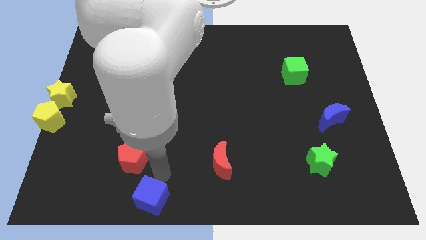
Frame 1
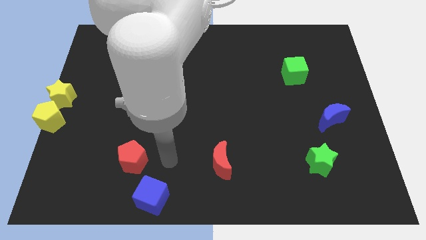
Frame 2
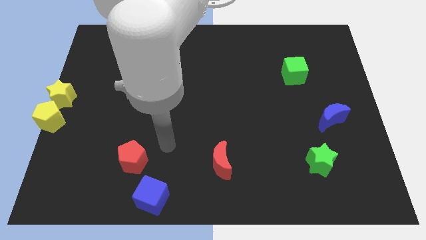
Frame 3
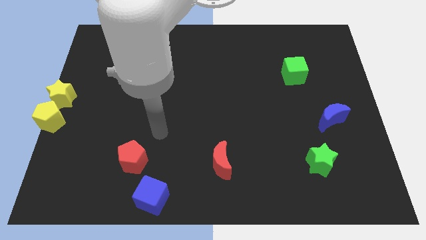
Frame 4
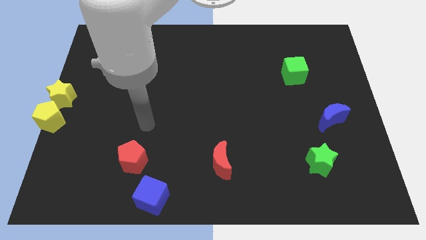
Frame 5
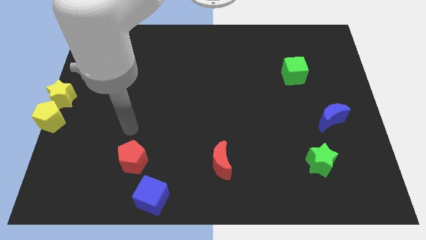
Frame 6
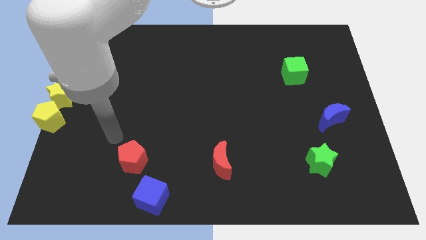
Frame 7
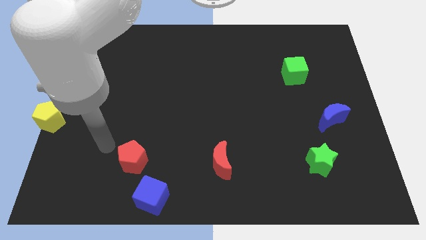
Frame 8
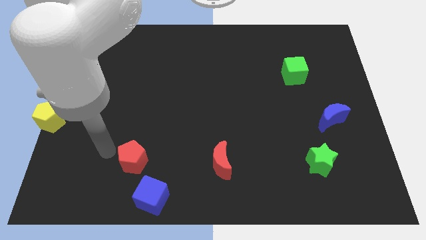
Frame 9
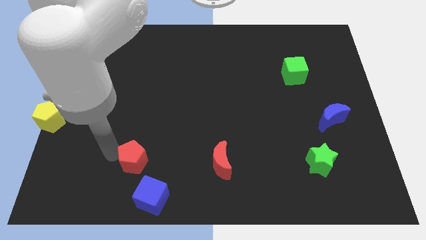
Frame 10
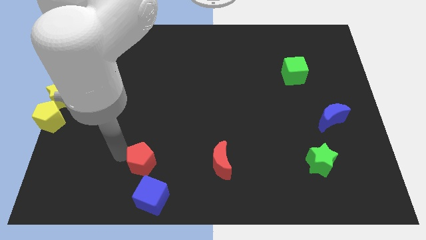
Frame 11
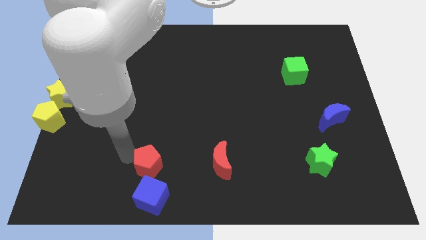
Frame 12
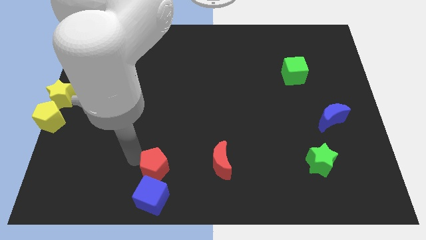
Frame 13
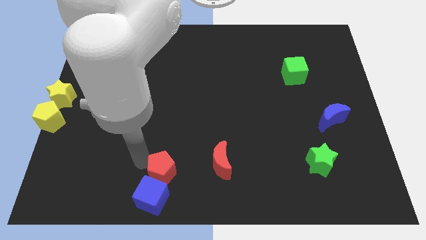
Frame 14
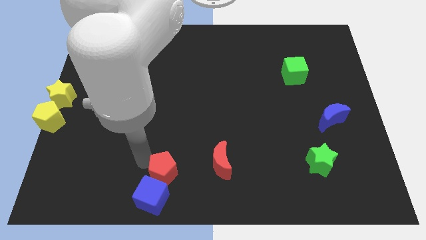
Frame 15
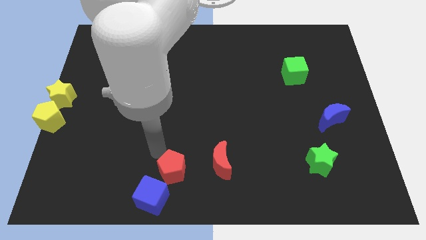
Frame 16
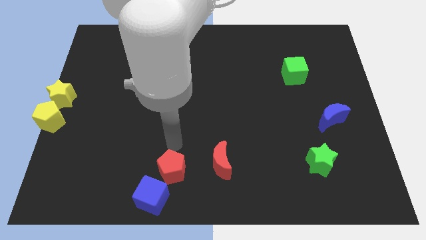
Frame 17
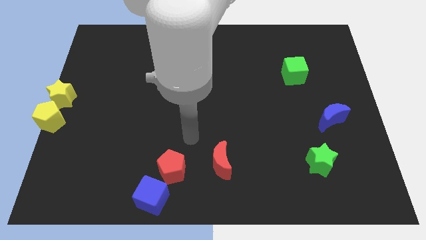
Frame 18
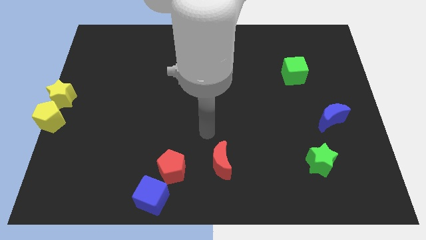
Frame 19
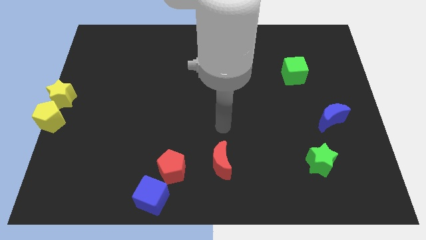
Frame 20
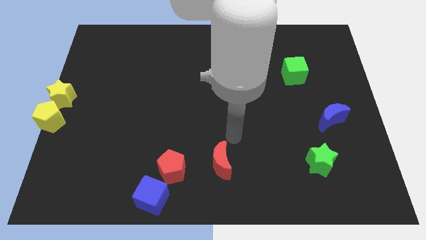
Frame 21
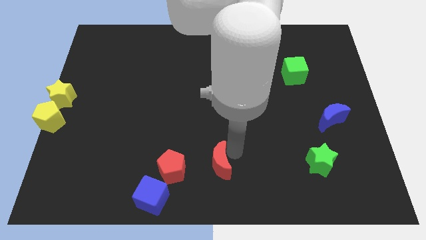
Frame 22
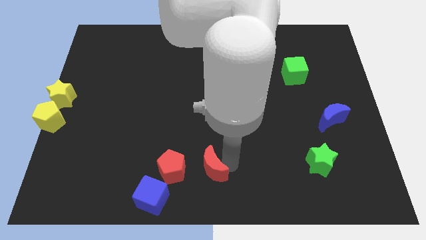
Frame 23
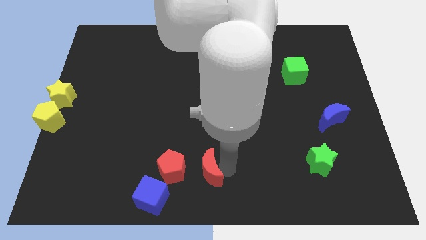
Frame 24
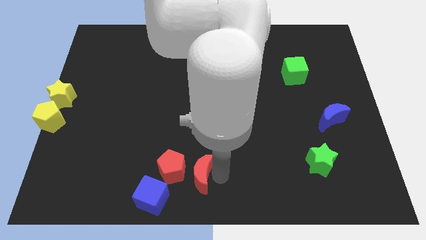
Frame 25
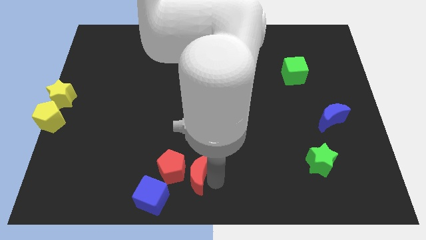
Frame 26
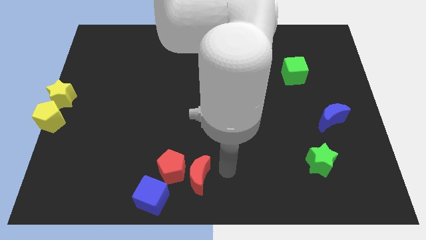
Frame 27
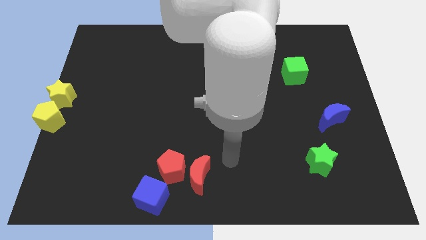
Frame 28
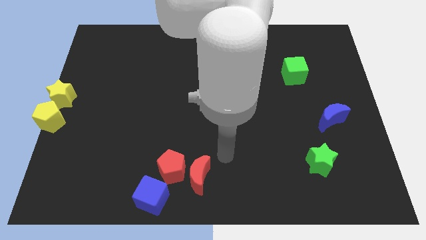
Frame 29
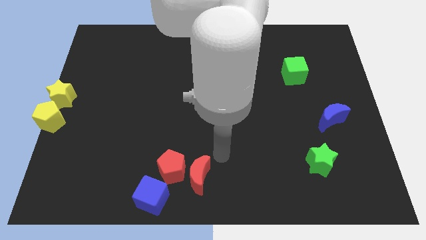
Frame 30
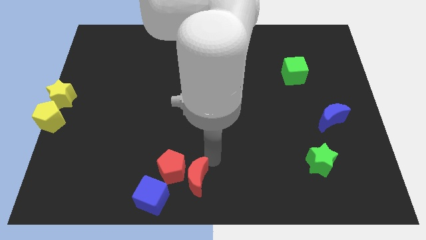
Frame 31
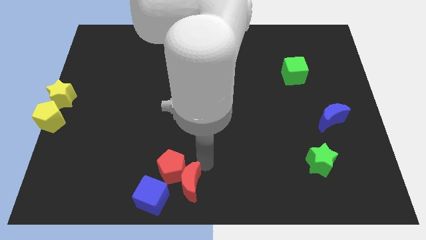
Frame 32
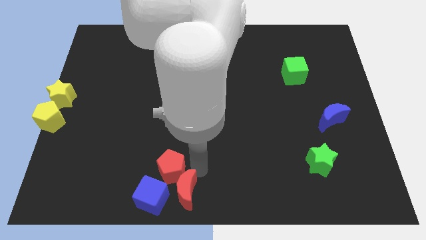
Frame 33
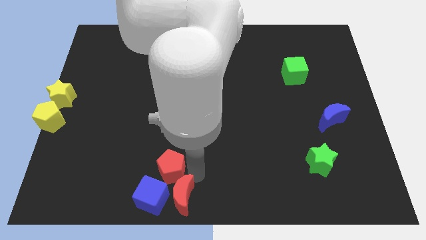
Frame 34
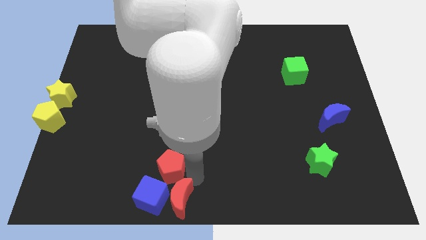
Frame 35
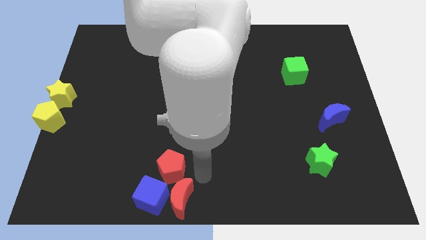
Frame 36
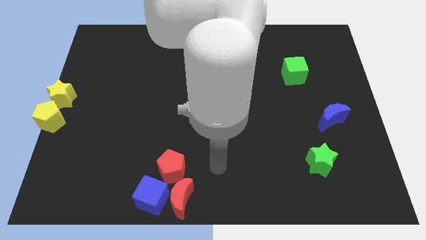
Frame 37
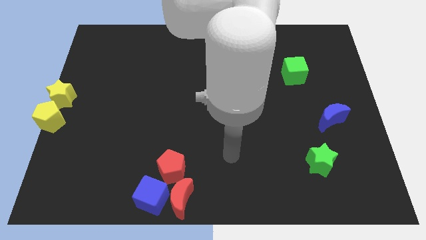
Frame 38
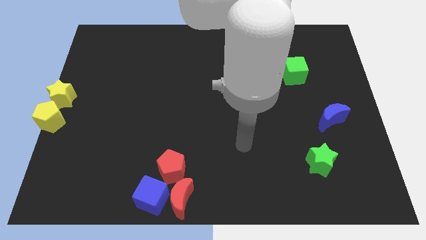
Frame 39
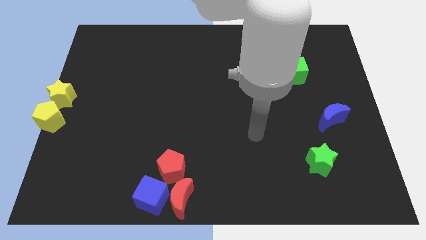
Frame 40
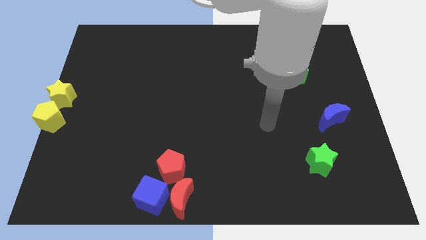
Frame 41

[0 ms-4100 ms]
move the red moon to the right side of the blue cube

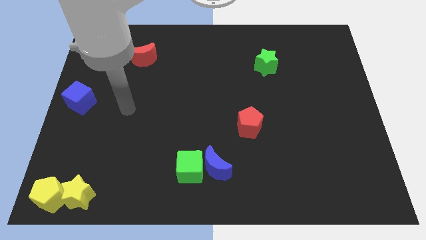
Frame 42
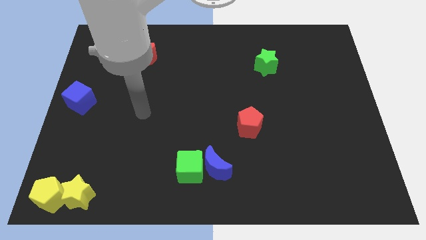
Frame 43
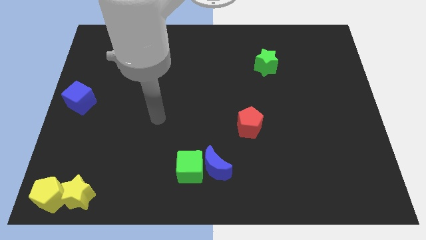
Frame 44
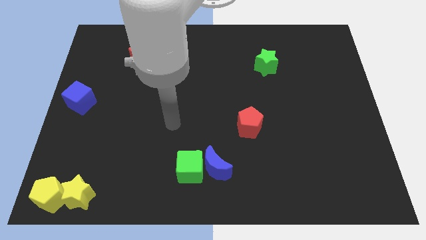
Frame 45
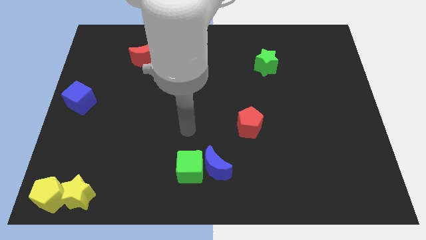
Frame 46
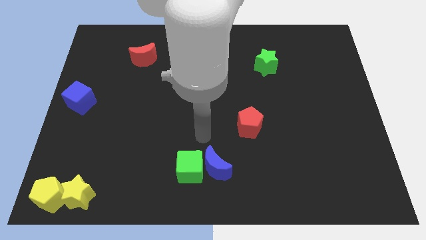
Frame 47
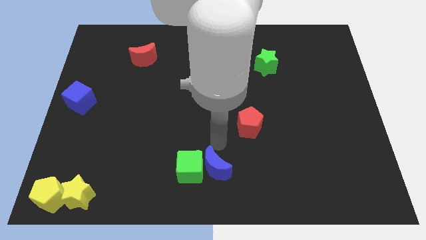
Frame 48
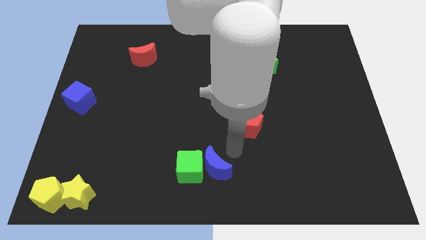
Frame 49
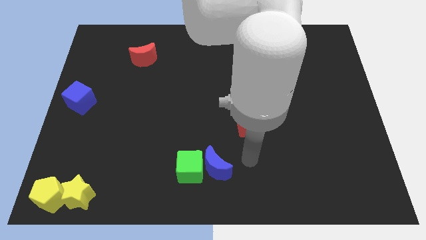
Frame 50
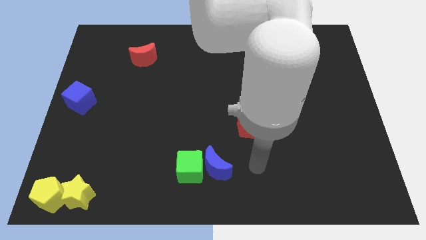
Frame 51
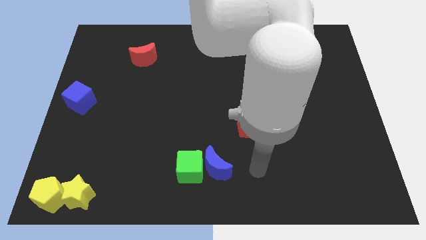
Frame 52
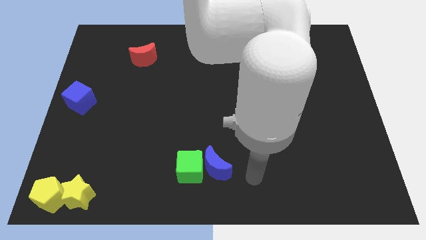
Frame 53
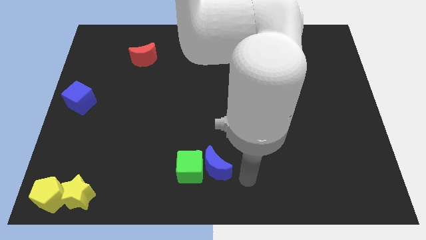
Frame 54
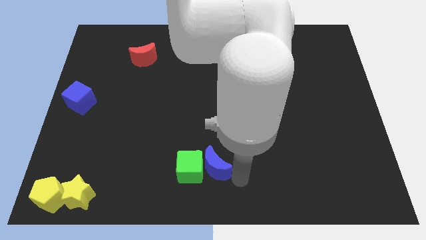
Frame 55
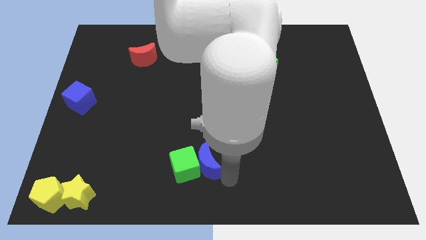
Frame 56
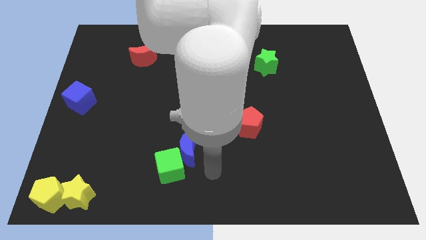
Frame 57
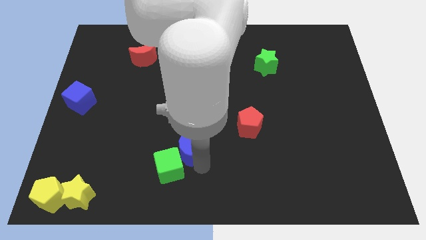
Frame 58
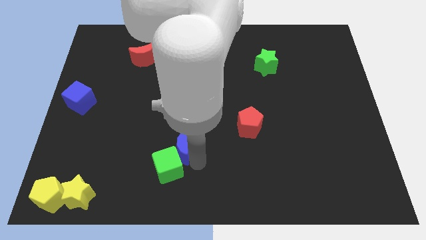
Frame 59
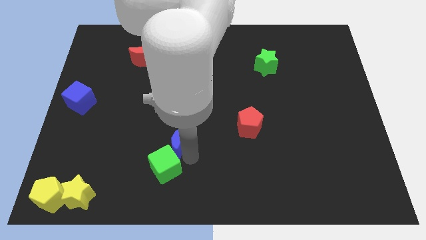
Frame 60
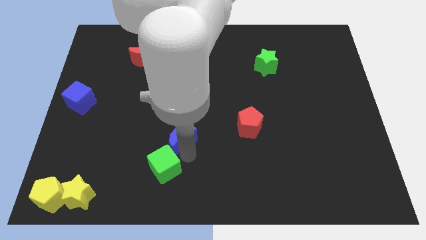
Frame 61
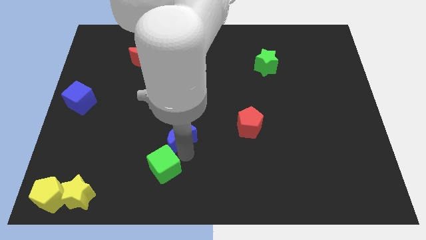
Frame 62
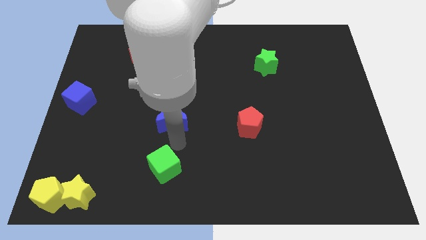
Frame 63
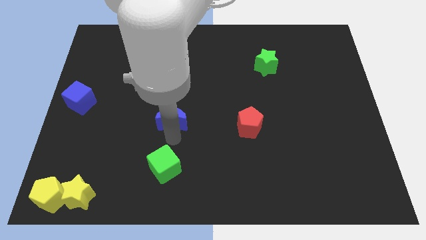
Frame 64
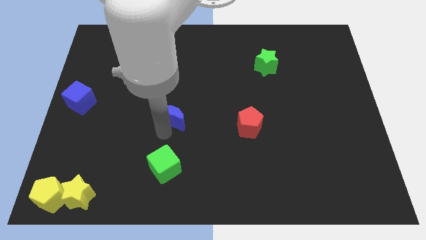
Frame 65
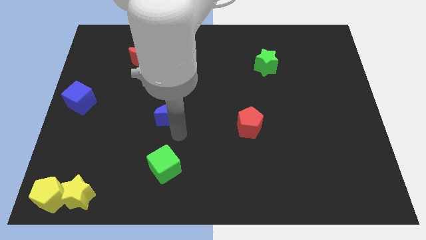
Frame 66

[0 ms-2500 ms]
separate the blue moon from the green square

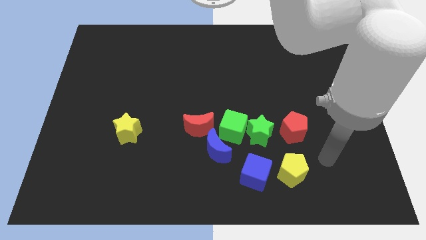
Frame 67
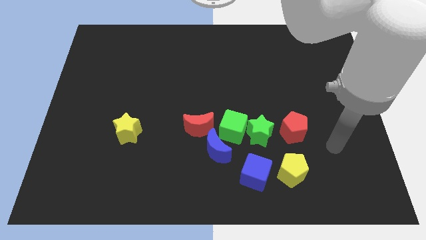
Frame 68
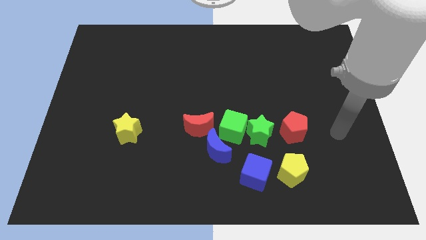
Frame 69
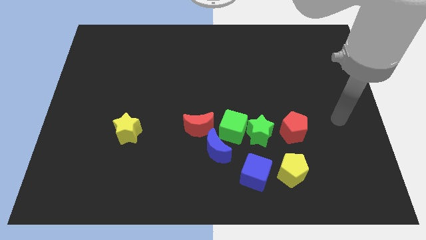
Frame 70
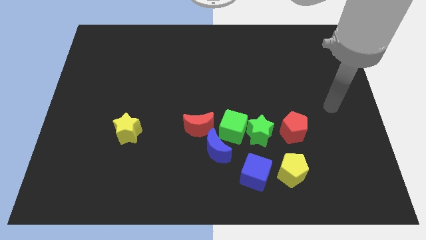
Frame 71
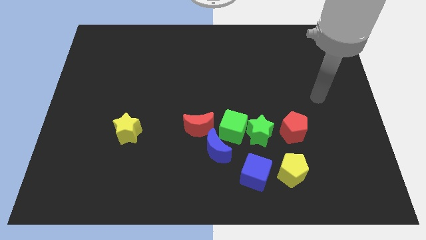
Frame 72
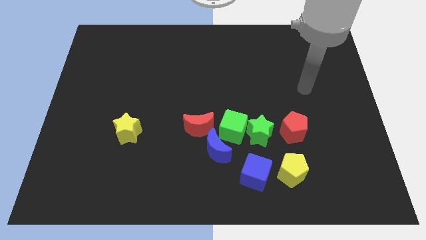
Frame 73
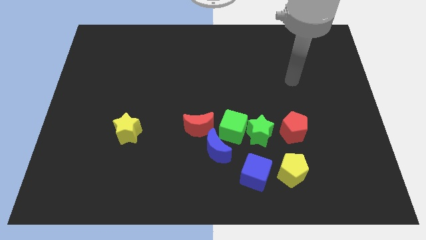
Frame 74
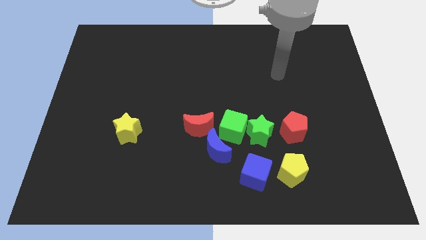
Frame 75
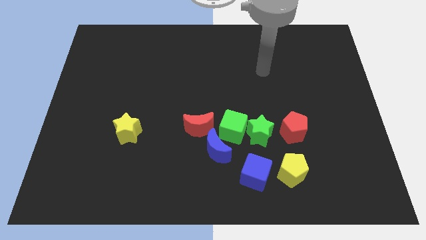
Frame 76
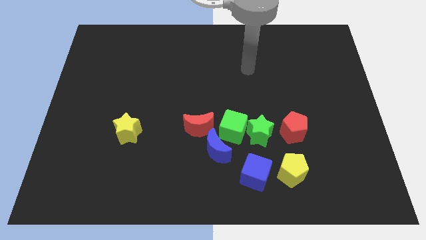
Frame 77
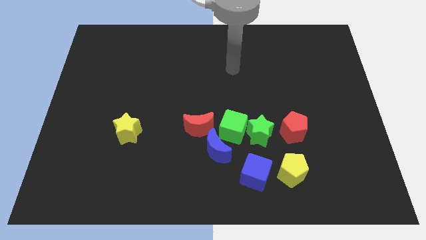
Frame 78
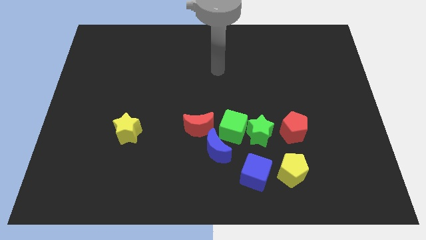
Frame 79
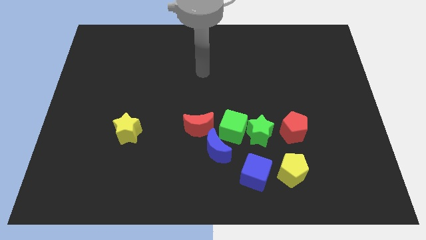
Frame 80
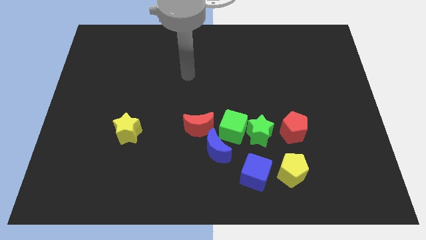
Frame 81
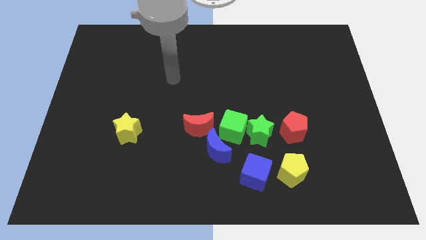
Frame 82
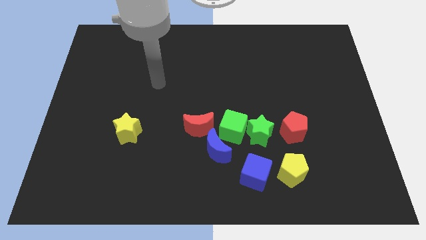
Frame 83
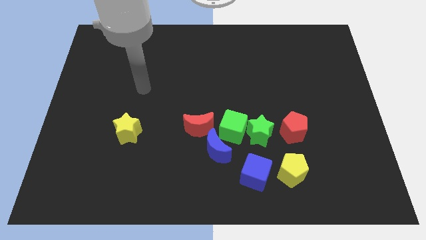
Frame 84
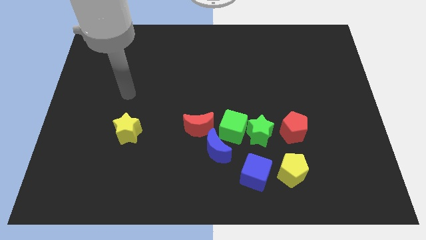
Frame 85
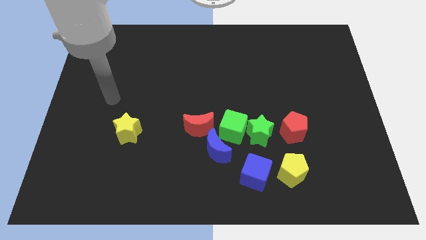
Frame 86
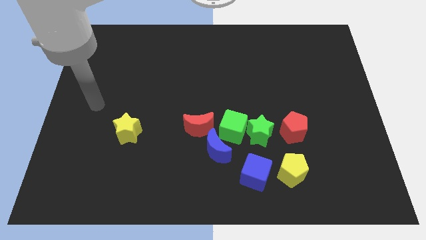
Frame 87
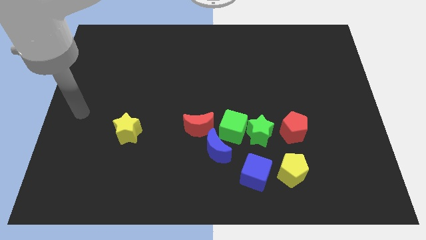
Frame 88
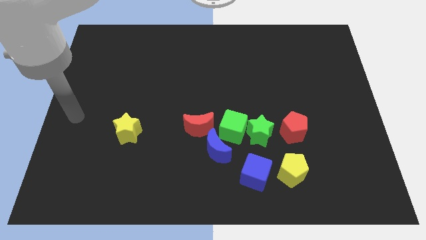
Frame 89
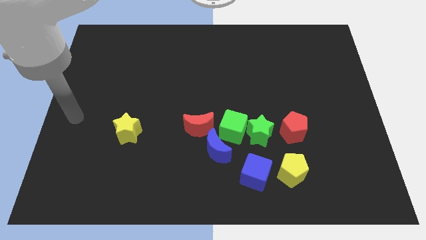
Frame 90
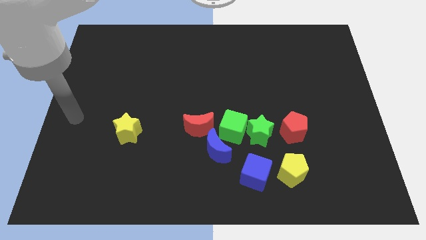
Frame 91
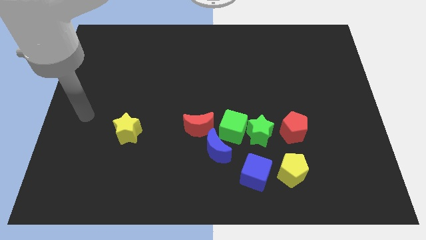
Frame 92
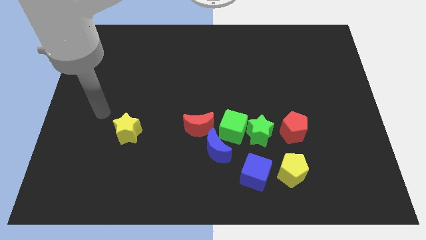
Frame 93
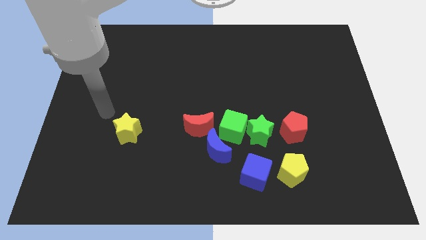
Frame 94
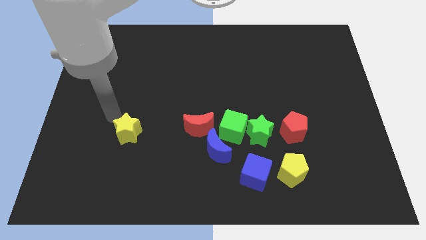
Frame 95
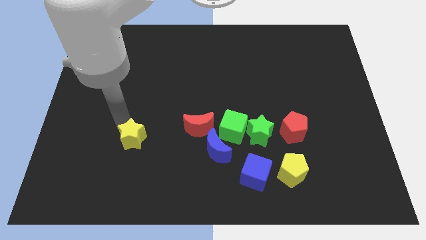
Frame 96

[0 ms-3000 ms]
touch the top of the yellow star
